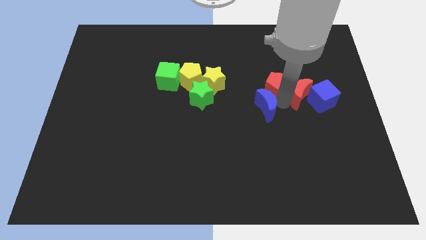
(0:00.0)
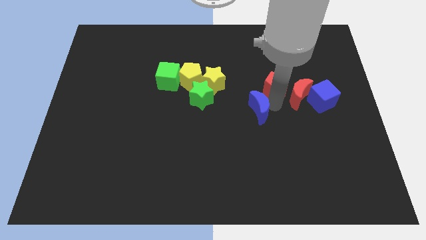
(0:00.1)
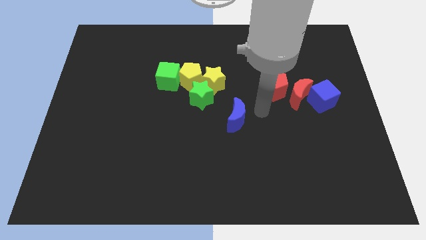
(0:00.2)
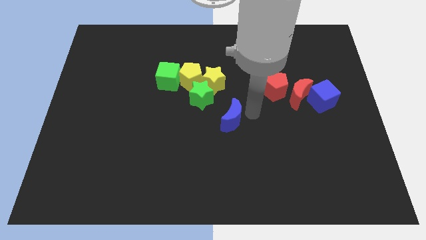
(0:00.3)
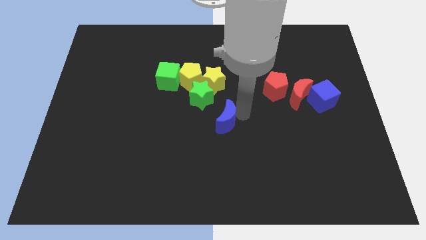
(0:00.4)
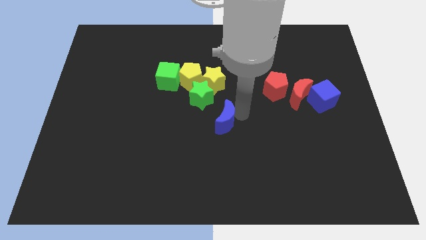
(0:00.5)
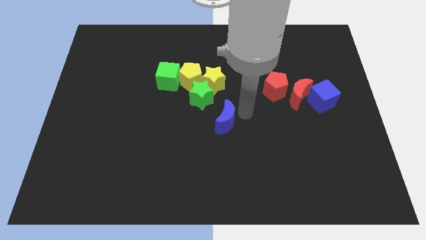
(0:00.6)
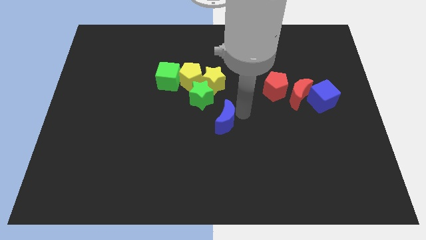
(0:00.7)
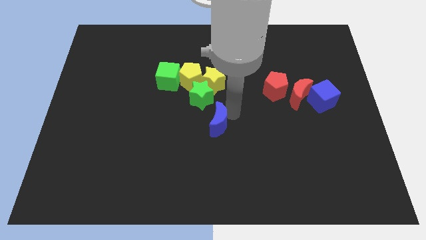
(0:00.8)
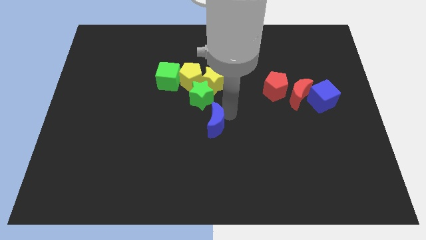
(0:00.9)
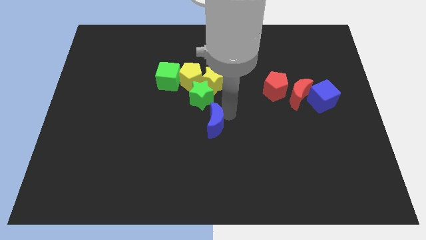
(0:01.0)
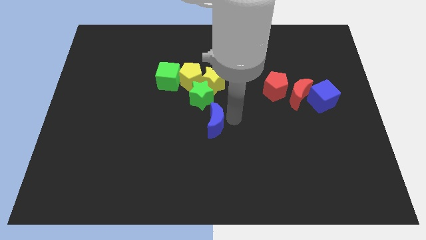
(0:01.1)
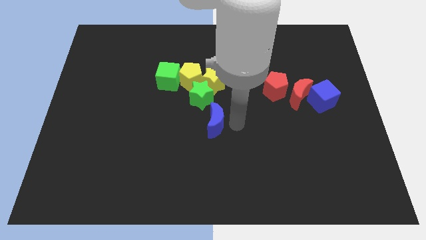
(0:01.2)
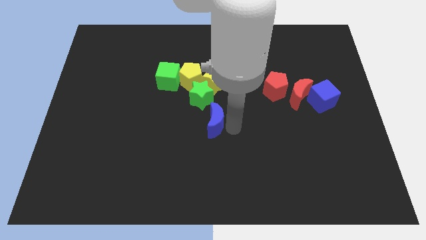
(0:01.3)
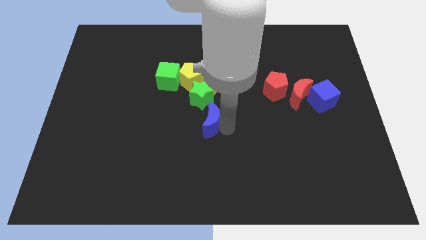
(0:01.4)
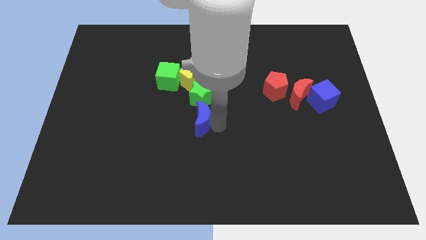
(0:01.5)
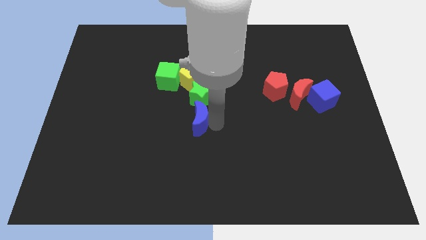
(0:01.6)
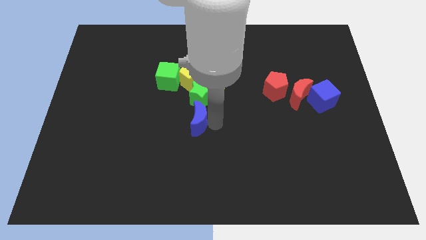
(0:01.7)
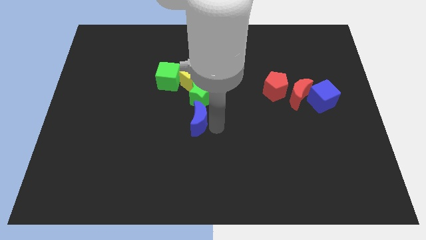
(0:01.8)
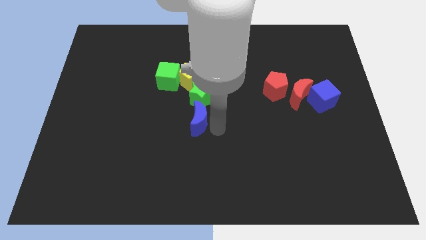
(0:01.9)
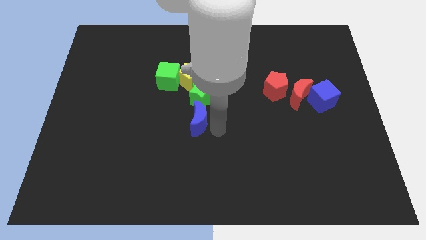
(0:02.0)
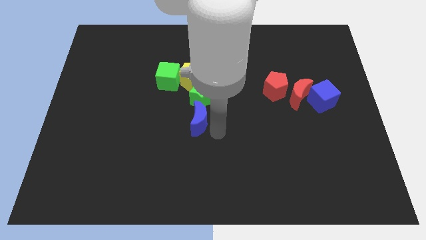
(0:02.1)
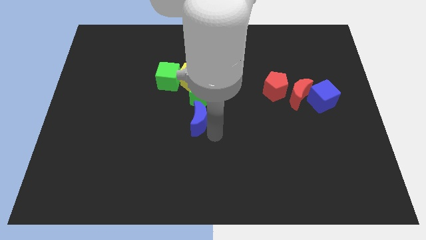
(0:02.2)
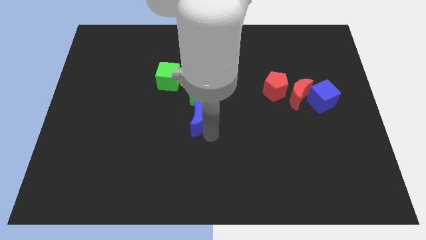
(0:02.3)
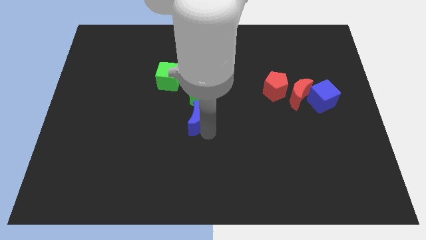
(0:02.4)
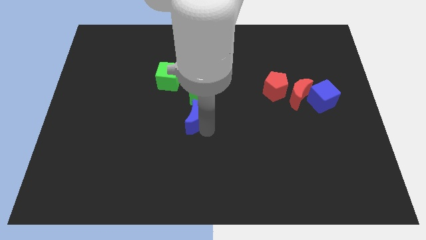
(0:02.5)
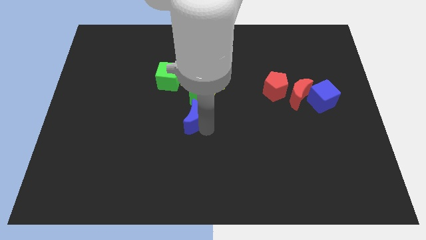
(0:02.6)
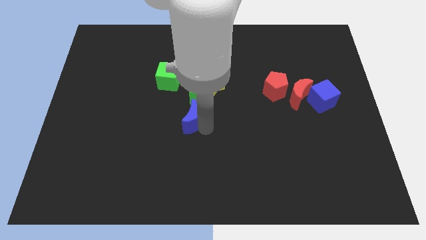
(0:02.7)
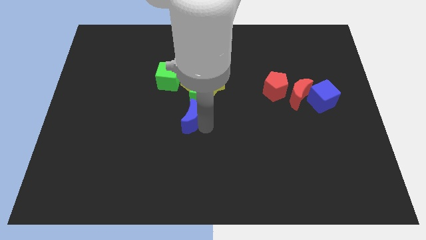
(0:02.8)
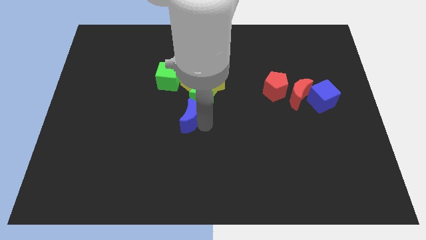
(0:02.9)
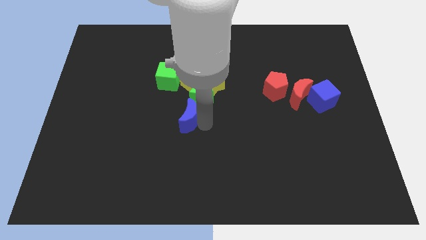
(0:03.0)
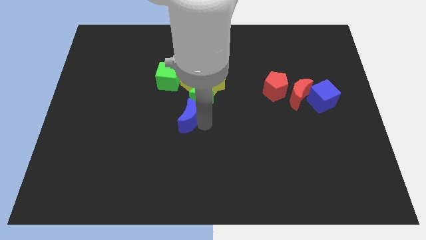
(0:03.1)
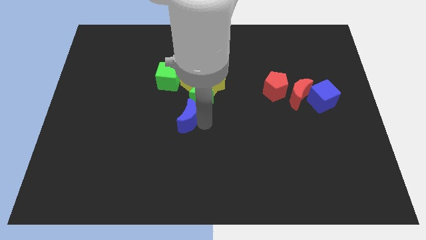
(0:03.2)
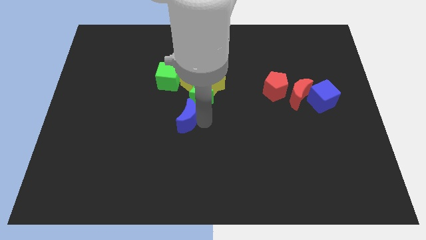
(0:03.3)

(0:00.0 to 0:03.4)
put the blue crescent below the green star

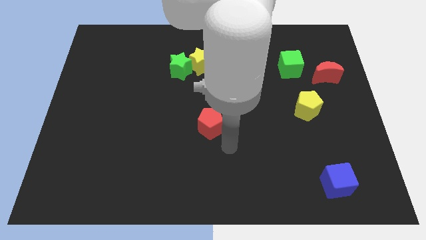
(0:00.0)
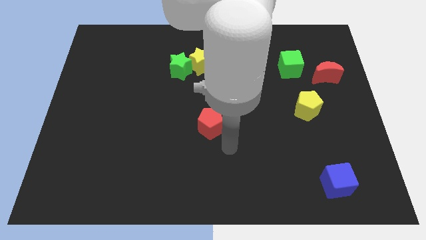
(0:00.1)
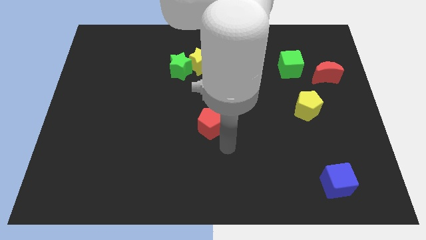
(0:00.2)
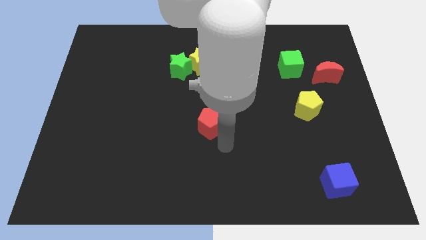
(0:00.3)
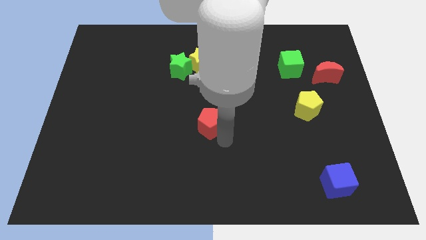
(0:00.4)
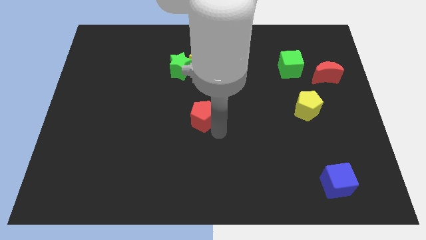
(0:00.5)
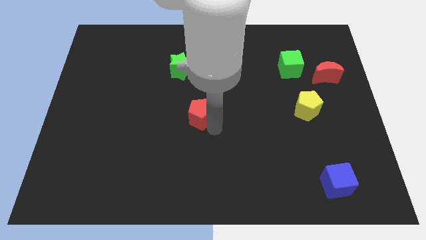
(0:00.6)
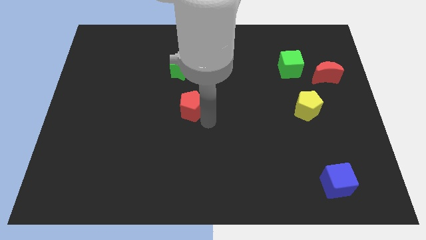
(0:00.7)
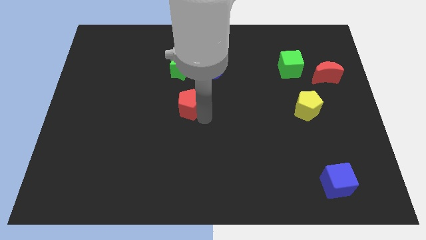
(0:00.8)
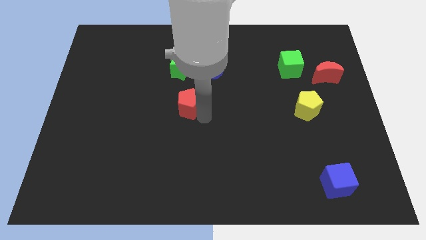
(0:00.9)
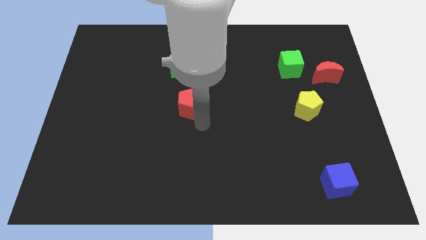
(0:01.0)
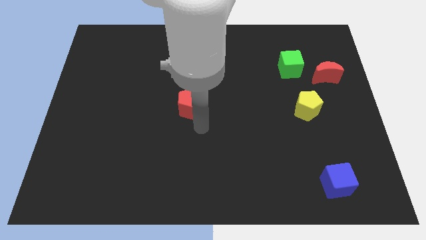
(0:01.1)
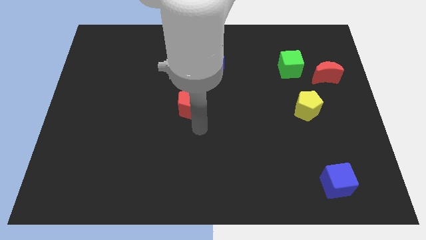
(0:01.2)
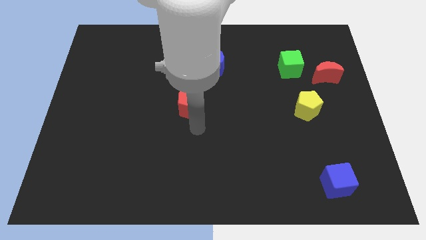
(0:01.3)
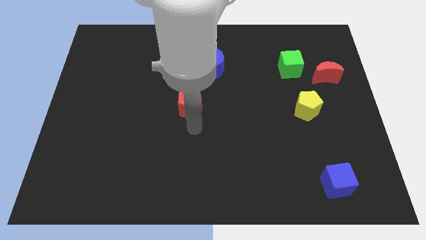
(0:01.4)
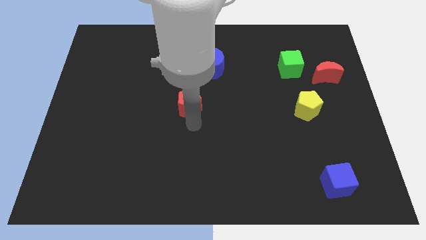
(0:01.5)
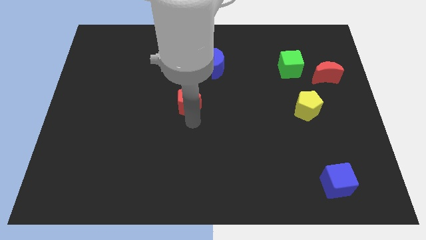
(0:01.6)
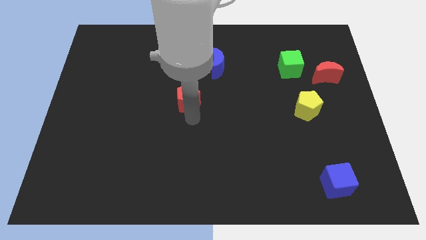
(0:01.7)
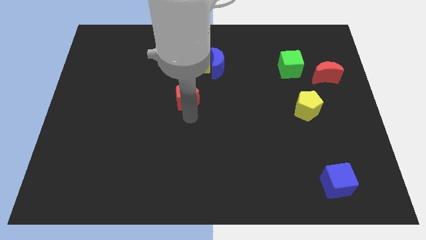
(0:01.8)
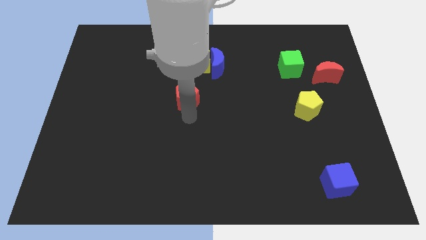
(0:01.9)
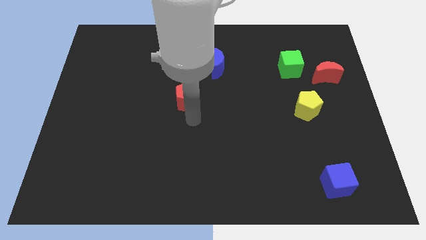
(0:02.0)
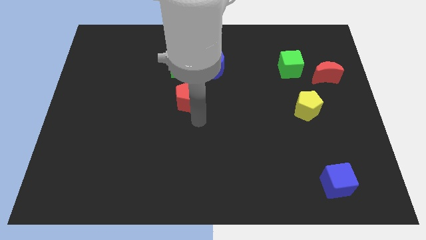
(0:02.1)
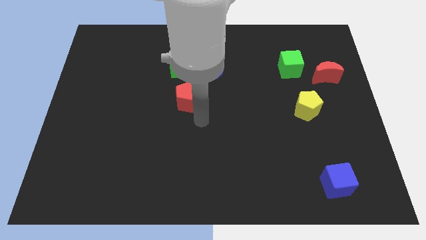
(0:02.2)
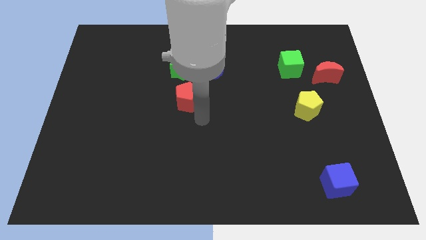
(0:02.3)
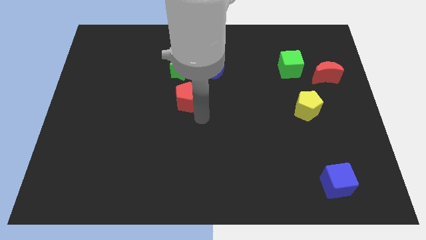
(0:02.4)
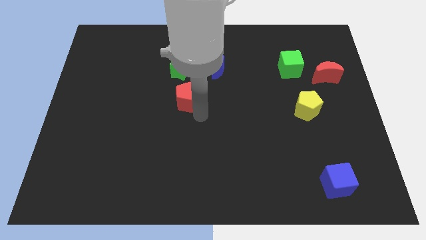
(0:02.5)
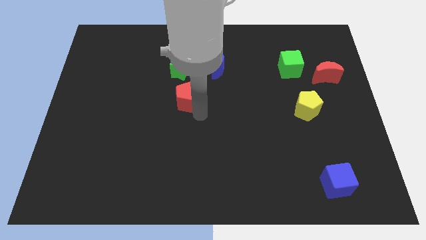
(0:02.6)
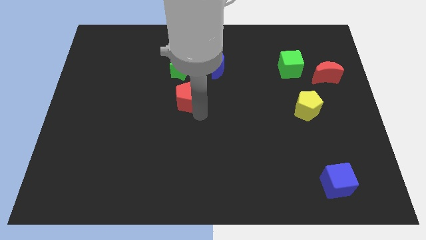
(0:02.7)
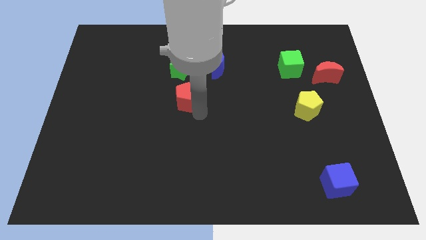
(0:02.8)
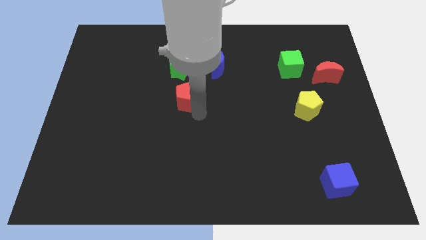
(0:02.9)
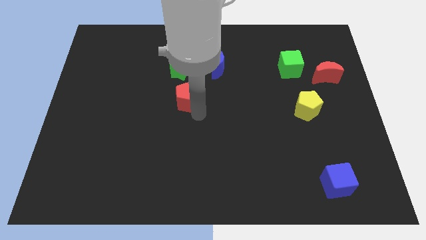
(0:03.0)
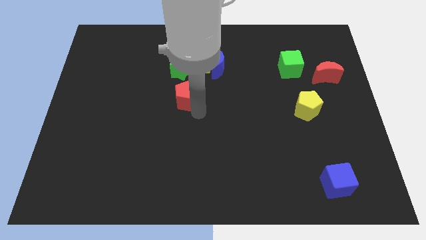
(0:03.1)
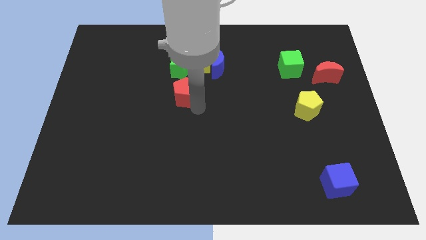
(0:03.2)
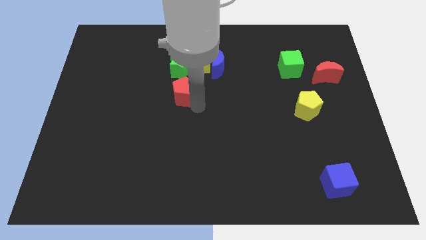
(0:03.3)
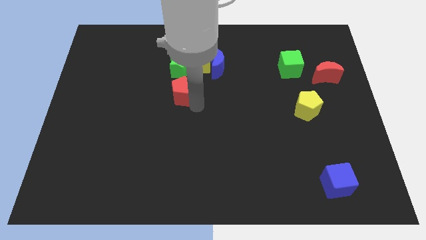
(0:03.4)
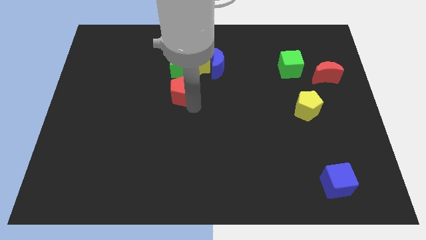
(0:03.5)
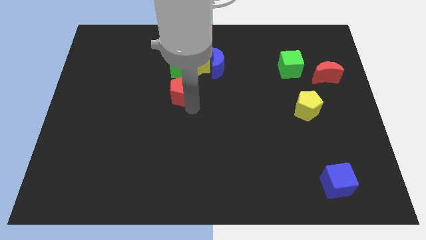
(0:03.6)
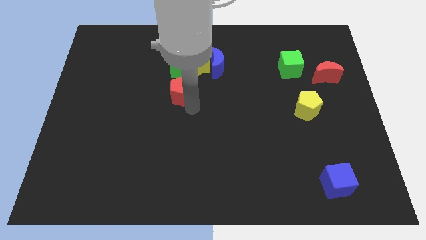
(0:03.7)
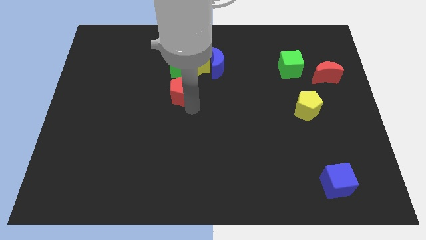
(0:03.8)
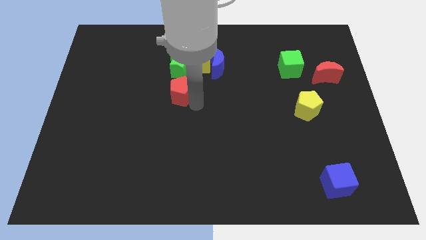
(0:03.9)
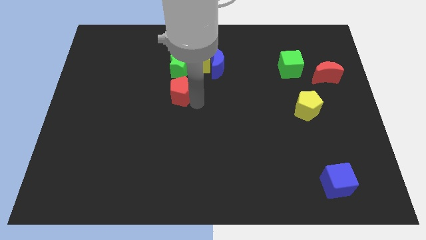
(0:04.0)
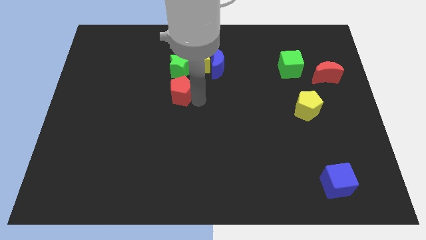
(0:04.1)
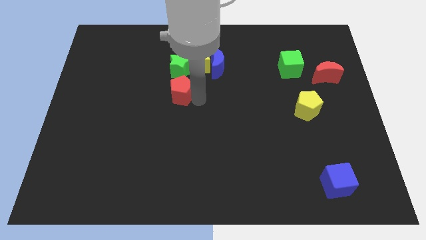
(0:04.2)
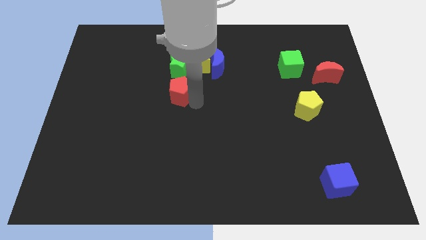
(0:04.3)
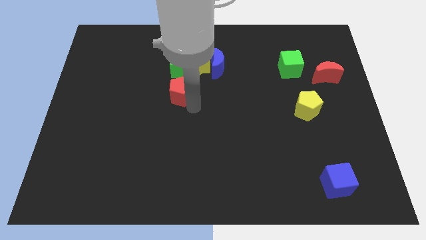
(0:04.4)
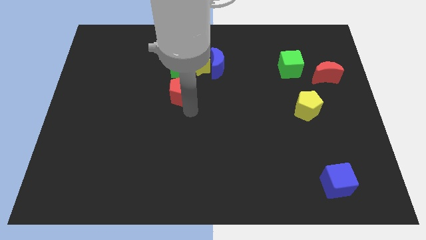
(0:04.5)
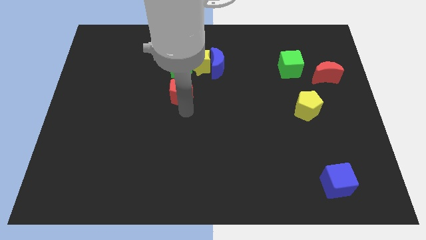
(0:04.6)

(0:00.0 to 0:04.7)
move the red pentagon down to the green star

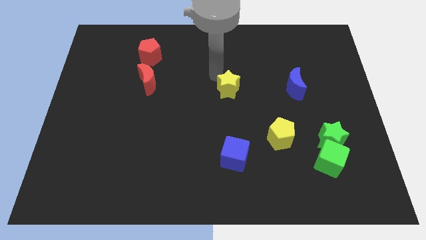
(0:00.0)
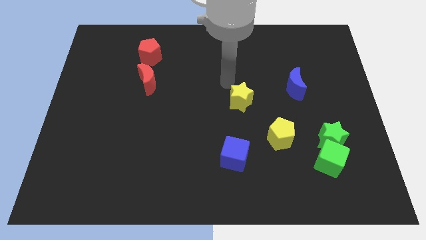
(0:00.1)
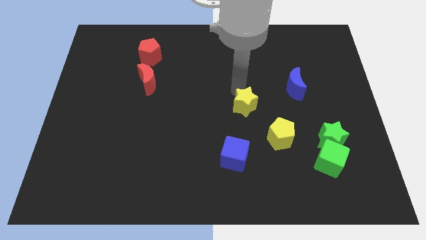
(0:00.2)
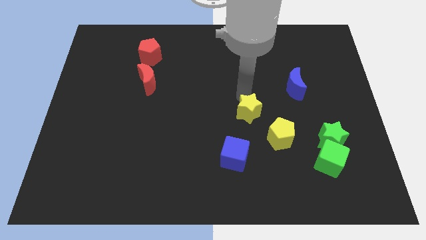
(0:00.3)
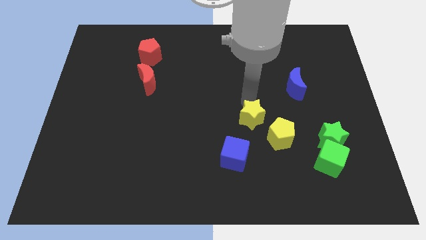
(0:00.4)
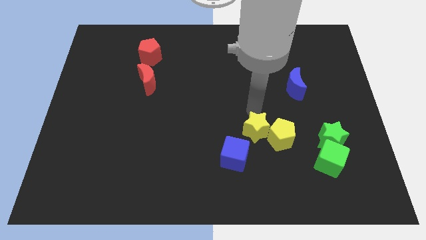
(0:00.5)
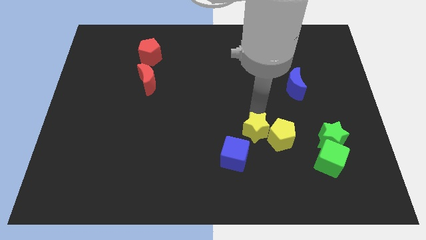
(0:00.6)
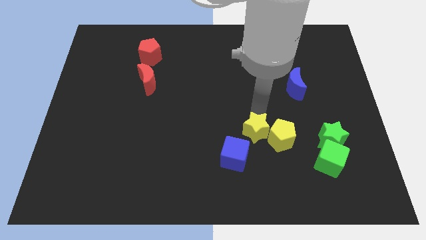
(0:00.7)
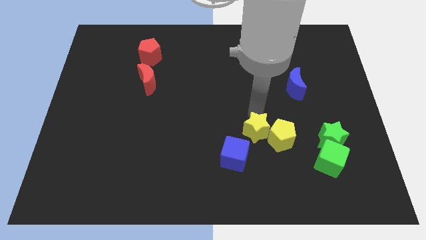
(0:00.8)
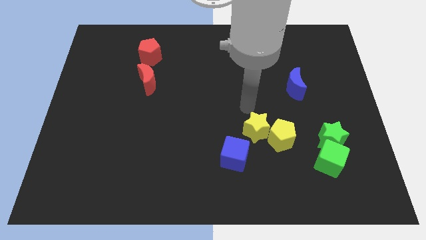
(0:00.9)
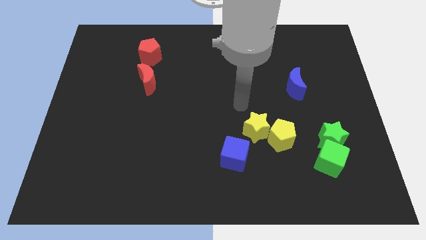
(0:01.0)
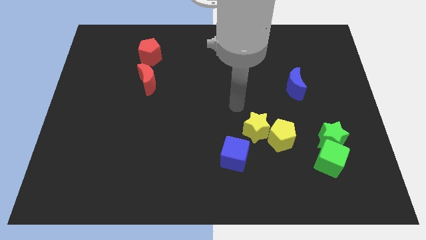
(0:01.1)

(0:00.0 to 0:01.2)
move the yellow star to the left of the yellow pentagon
